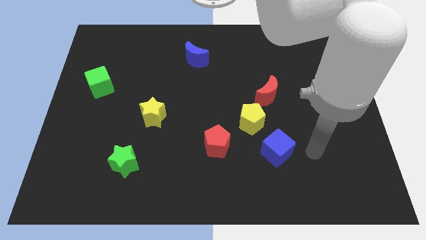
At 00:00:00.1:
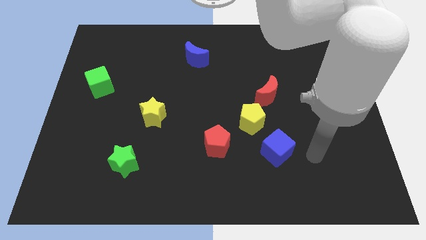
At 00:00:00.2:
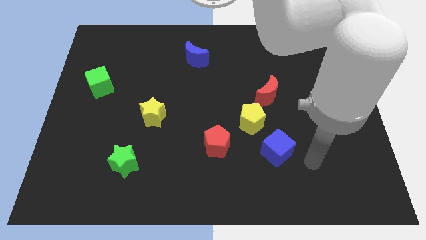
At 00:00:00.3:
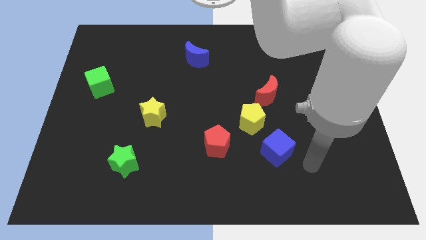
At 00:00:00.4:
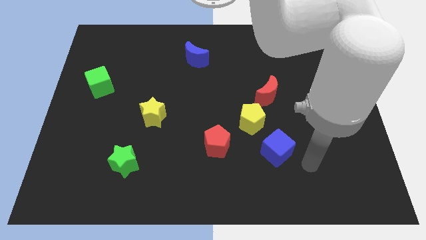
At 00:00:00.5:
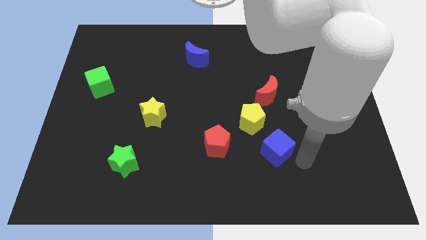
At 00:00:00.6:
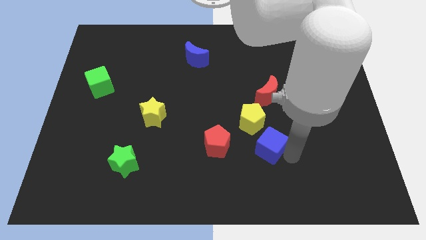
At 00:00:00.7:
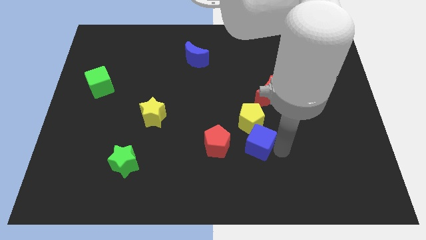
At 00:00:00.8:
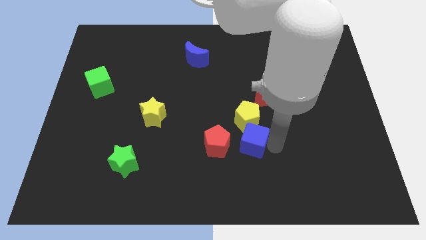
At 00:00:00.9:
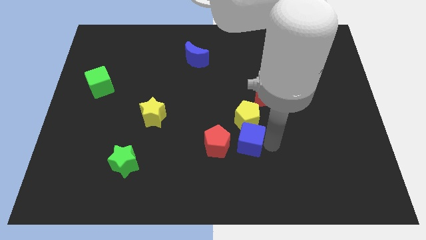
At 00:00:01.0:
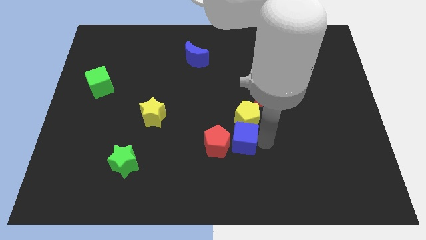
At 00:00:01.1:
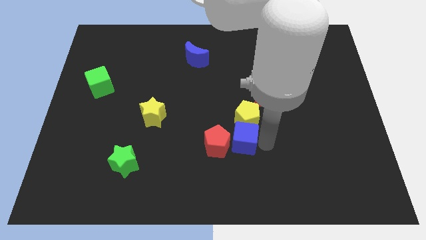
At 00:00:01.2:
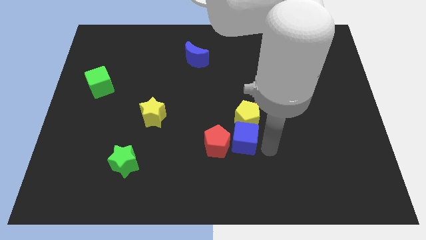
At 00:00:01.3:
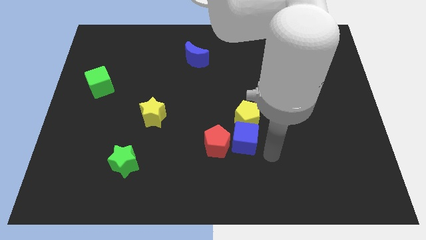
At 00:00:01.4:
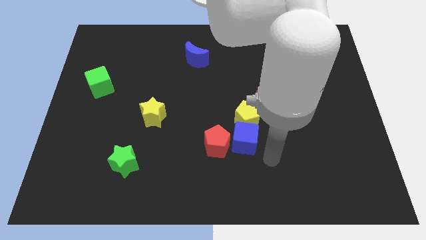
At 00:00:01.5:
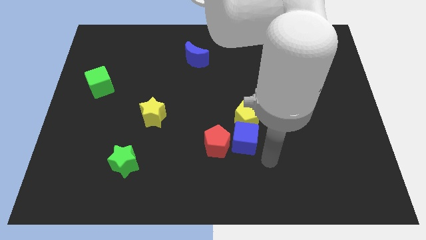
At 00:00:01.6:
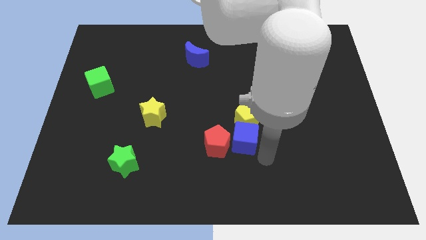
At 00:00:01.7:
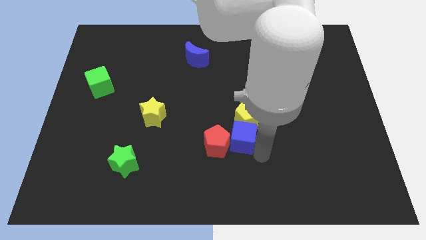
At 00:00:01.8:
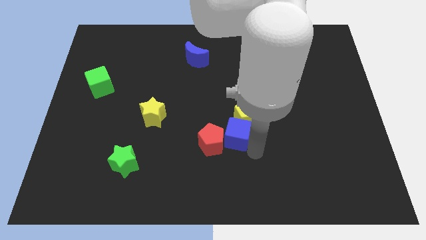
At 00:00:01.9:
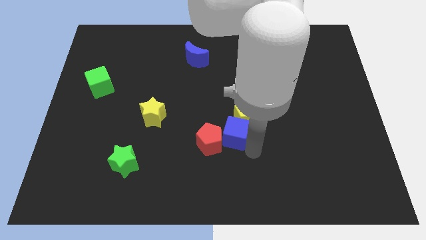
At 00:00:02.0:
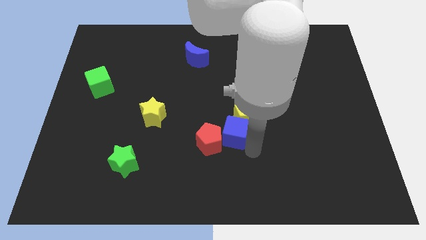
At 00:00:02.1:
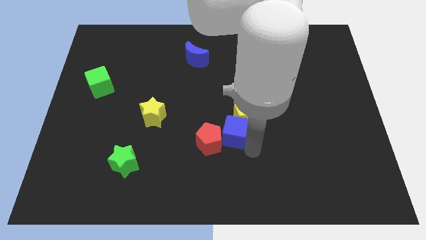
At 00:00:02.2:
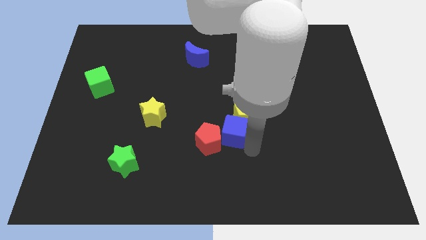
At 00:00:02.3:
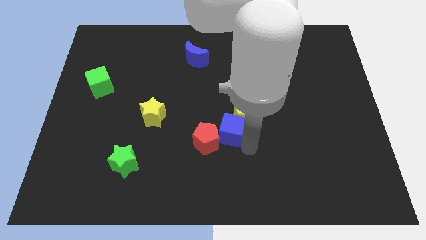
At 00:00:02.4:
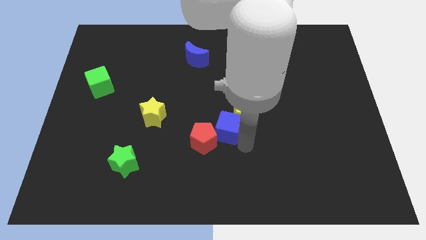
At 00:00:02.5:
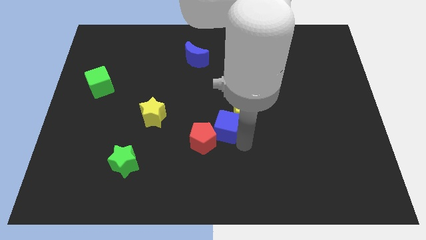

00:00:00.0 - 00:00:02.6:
place the blue cube in between yellow pentagon and red pentagon

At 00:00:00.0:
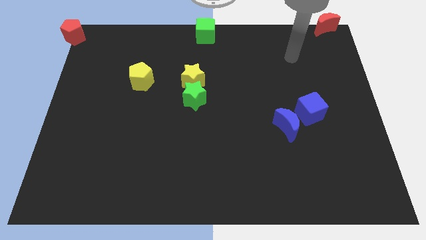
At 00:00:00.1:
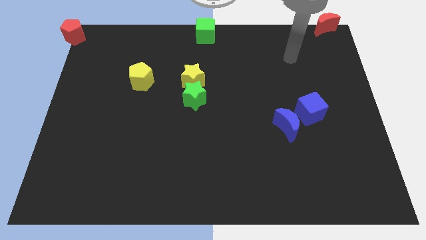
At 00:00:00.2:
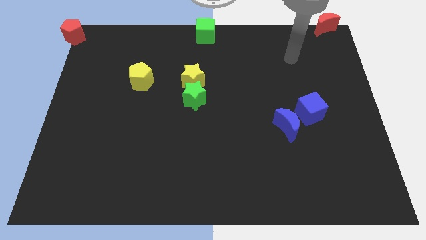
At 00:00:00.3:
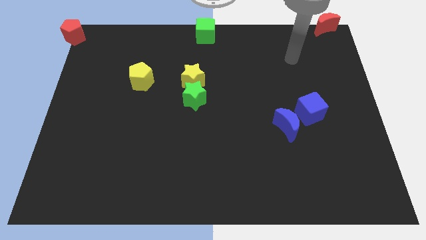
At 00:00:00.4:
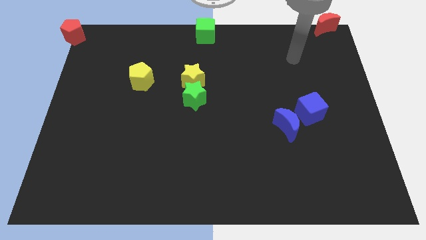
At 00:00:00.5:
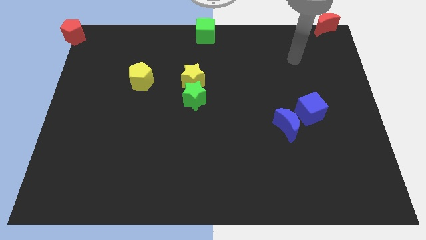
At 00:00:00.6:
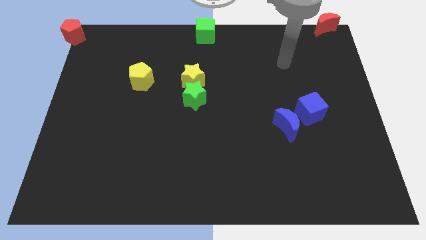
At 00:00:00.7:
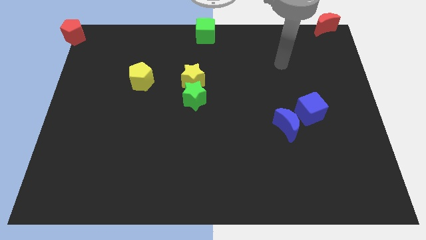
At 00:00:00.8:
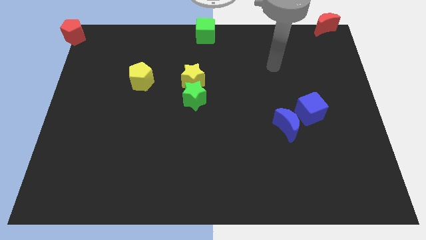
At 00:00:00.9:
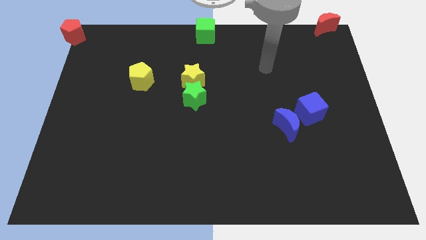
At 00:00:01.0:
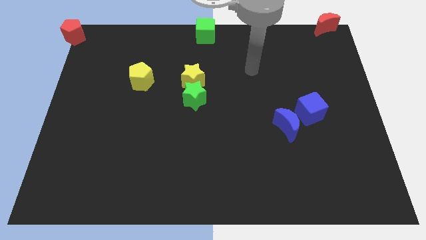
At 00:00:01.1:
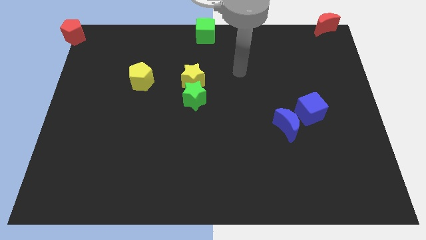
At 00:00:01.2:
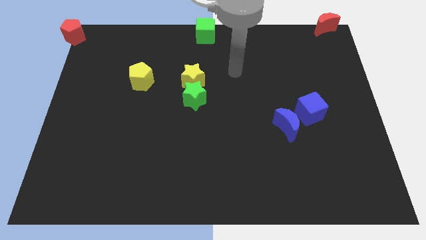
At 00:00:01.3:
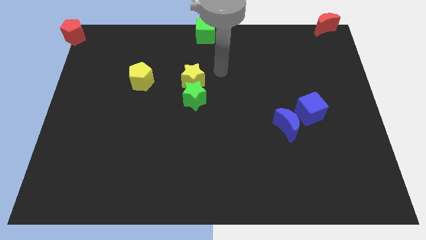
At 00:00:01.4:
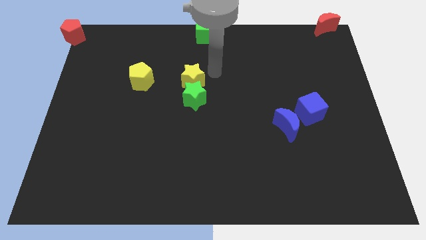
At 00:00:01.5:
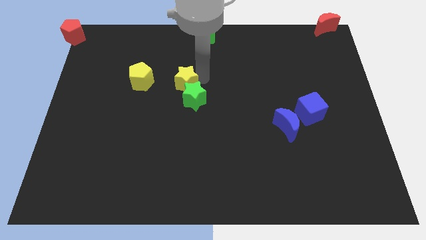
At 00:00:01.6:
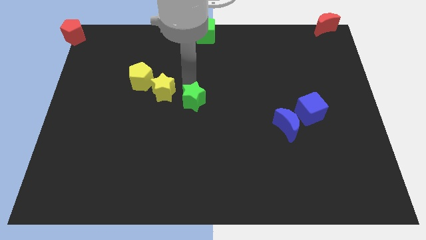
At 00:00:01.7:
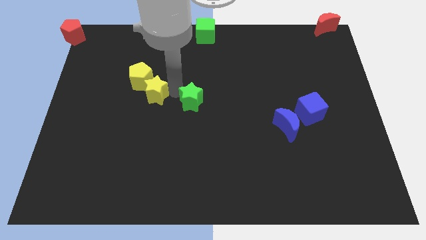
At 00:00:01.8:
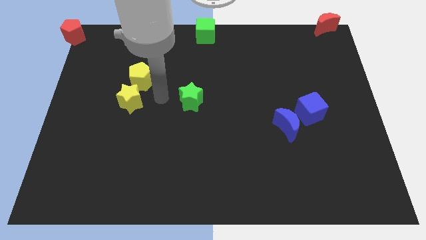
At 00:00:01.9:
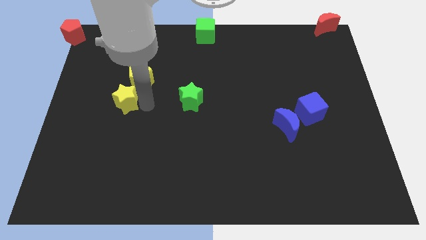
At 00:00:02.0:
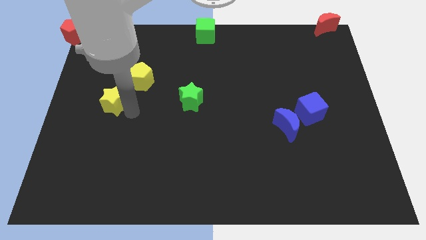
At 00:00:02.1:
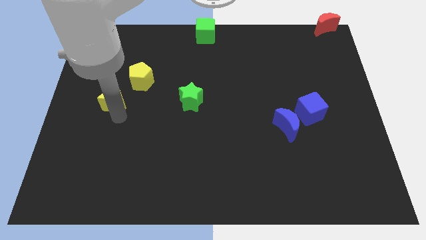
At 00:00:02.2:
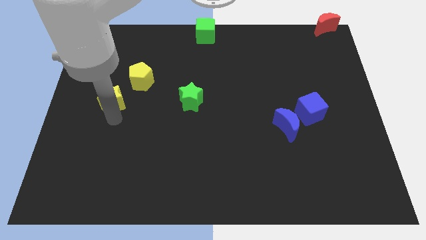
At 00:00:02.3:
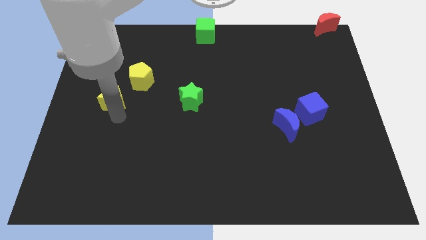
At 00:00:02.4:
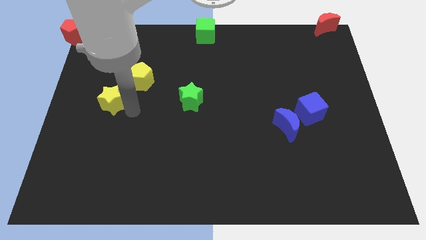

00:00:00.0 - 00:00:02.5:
move the yellow star towards left

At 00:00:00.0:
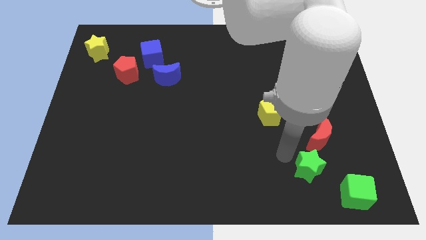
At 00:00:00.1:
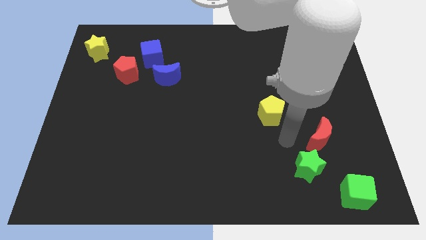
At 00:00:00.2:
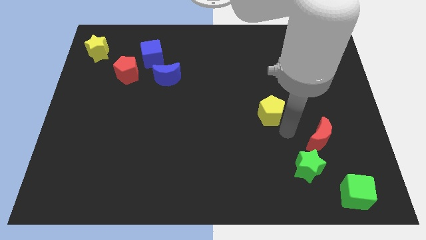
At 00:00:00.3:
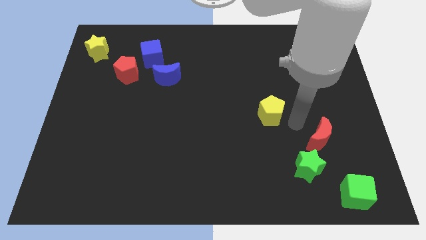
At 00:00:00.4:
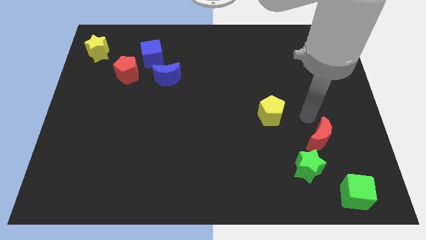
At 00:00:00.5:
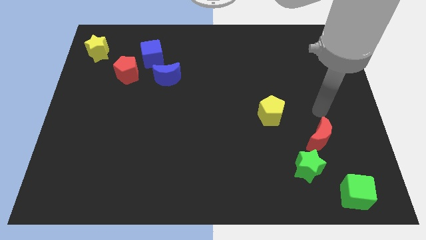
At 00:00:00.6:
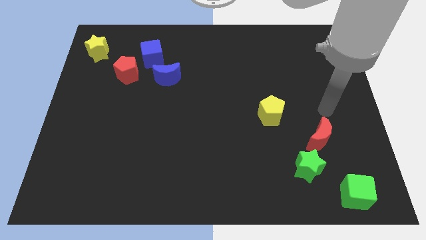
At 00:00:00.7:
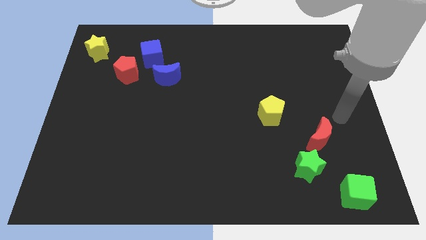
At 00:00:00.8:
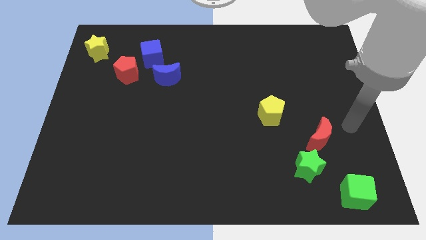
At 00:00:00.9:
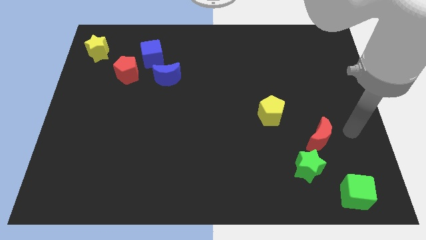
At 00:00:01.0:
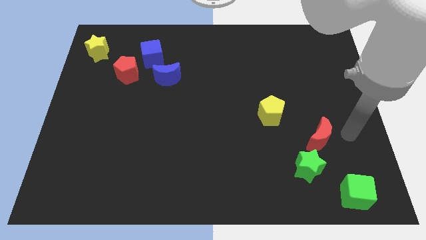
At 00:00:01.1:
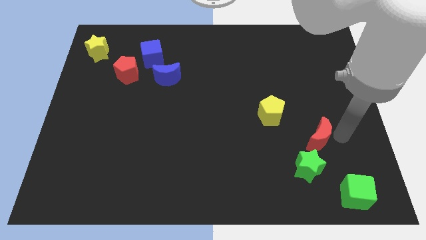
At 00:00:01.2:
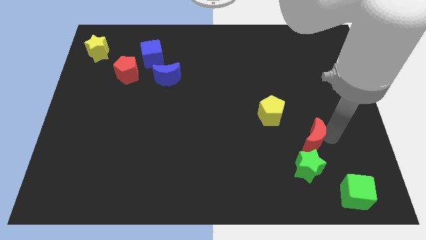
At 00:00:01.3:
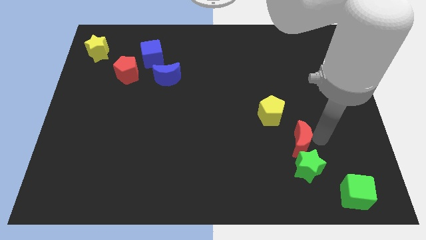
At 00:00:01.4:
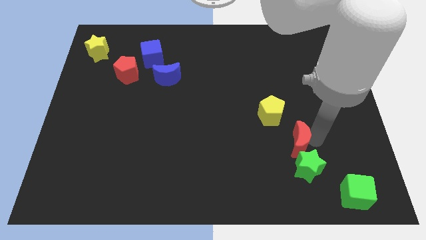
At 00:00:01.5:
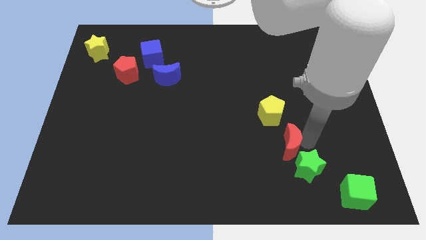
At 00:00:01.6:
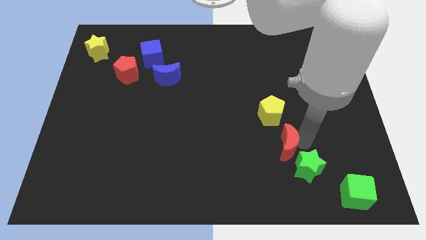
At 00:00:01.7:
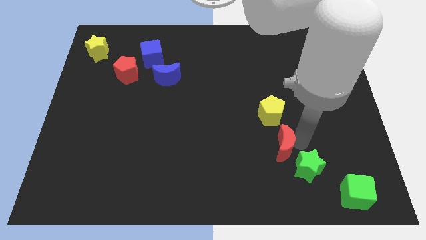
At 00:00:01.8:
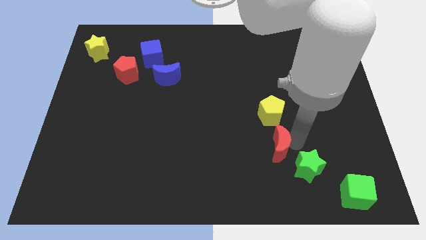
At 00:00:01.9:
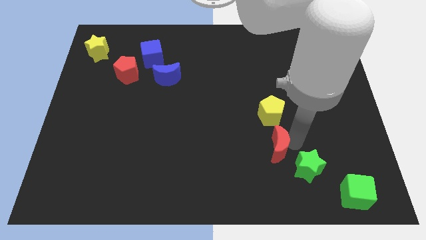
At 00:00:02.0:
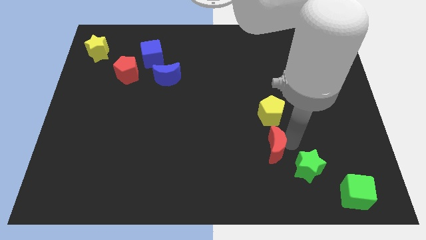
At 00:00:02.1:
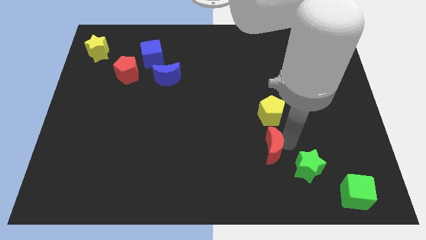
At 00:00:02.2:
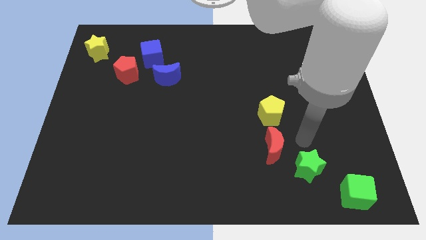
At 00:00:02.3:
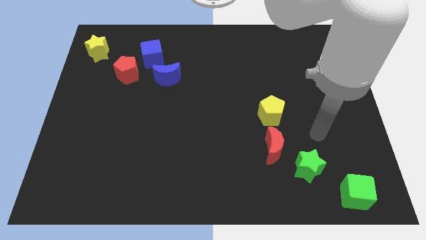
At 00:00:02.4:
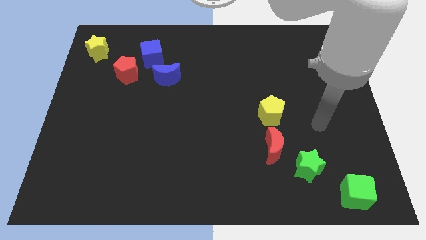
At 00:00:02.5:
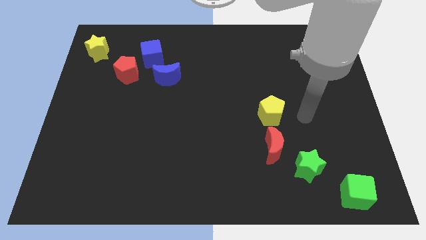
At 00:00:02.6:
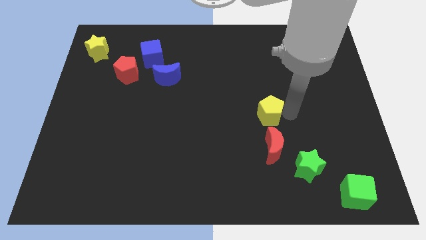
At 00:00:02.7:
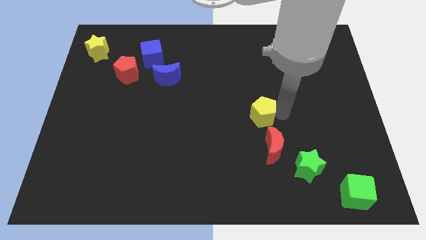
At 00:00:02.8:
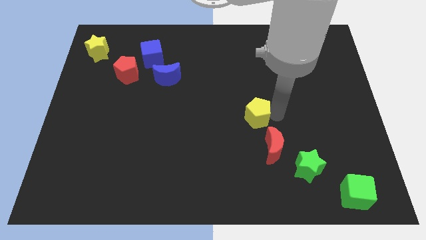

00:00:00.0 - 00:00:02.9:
push the red moon towards the left side of the board

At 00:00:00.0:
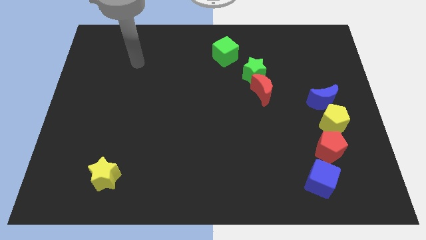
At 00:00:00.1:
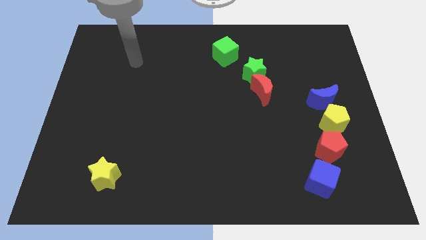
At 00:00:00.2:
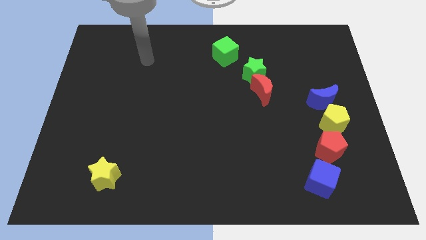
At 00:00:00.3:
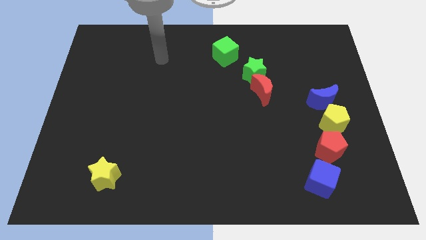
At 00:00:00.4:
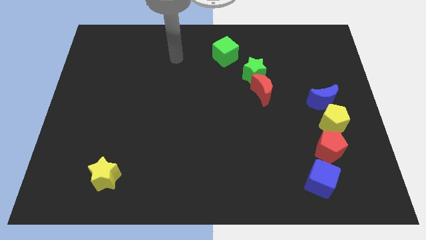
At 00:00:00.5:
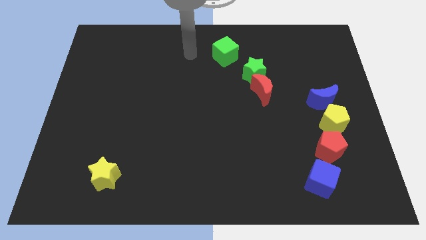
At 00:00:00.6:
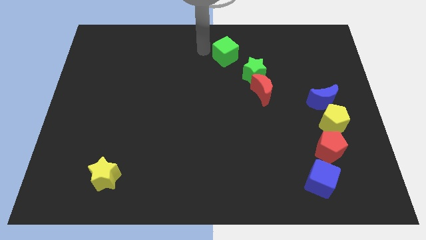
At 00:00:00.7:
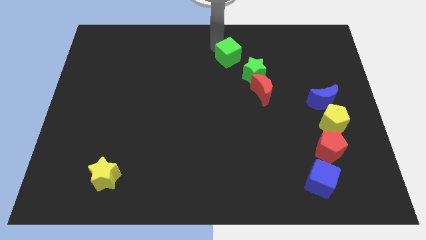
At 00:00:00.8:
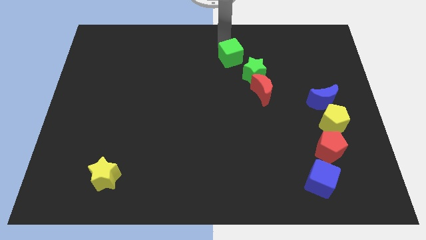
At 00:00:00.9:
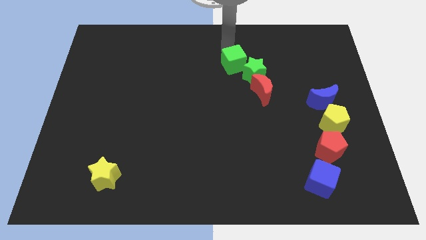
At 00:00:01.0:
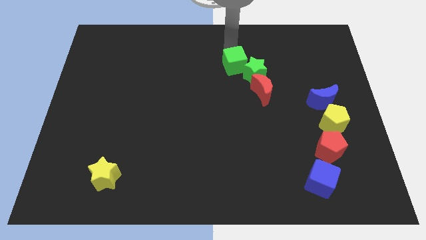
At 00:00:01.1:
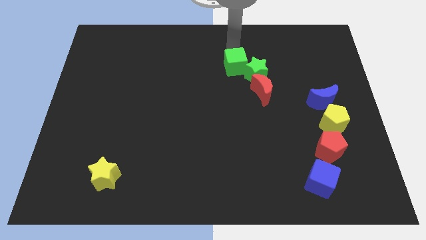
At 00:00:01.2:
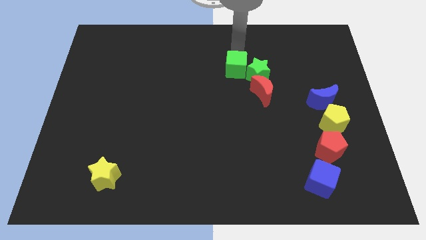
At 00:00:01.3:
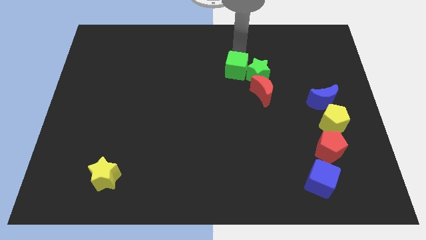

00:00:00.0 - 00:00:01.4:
place the green cube to the left of the green star
